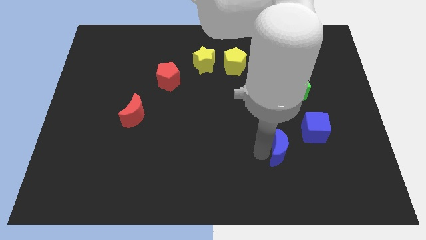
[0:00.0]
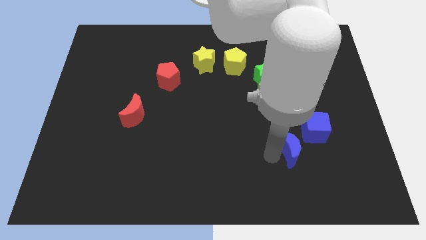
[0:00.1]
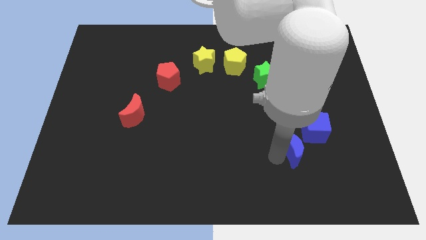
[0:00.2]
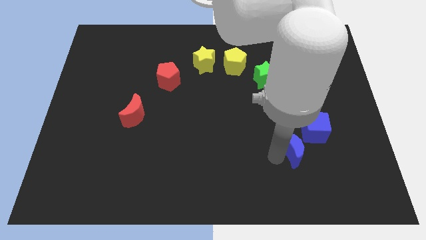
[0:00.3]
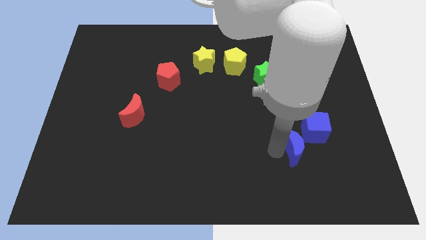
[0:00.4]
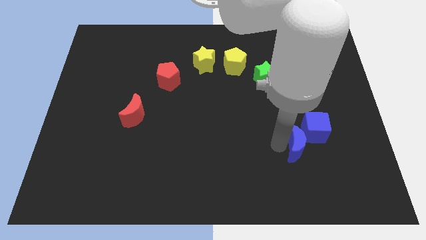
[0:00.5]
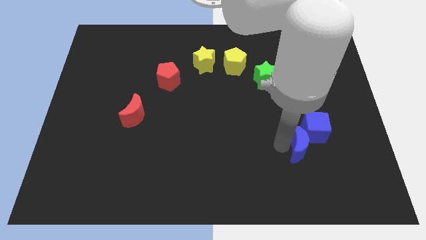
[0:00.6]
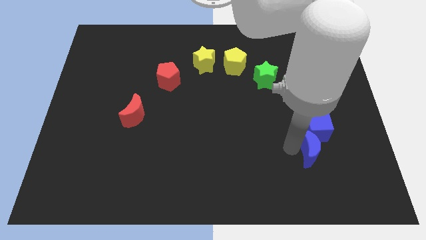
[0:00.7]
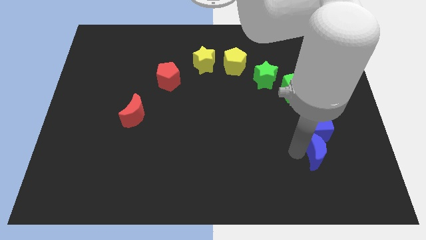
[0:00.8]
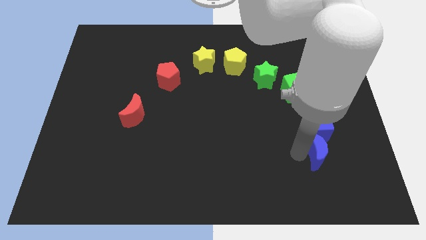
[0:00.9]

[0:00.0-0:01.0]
make the blue crescent to touch the blue cube

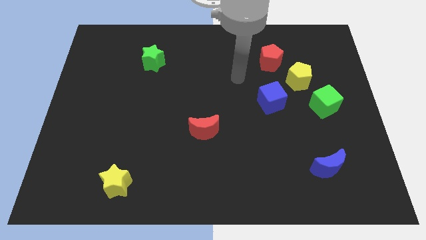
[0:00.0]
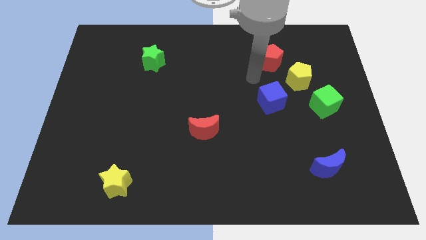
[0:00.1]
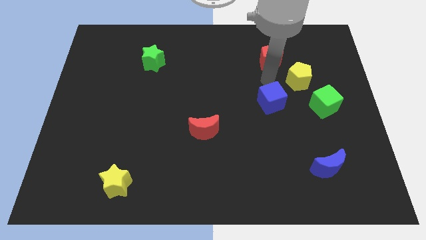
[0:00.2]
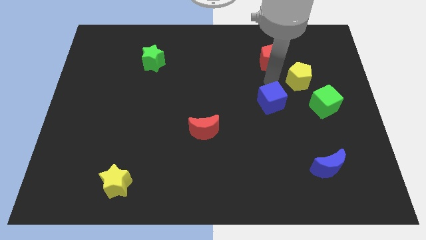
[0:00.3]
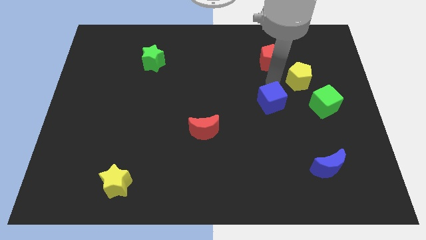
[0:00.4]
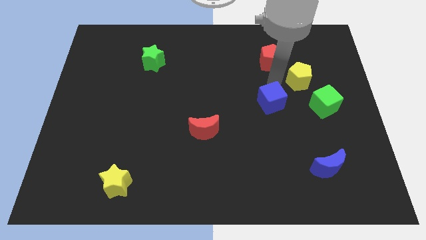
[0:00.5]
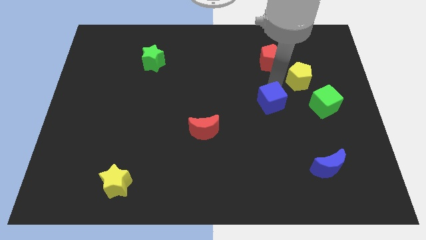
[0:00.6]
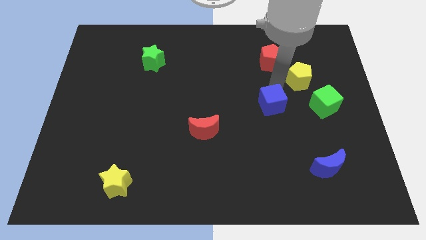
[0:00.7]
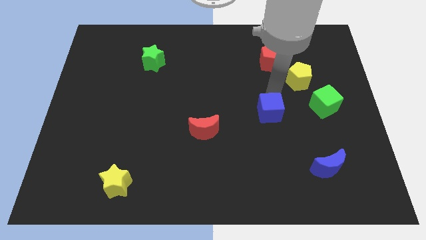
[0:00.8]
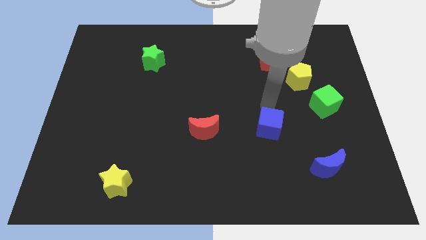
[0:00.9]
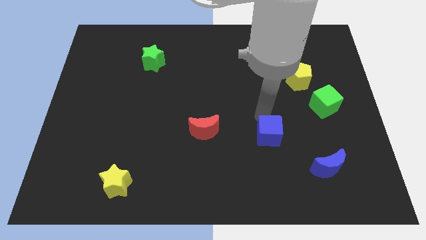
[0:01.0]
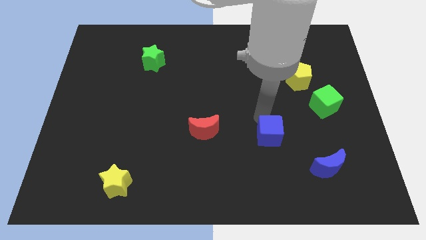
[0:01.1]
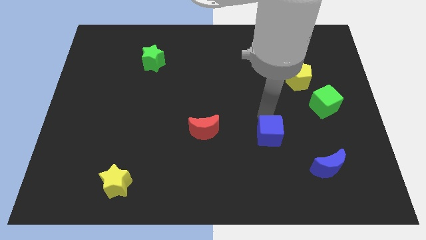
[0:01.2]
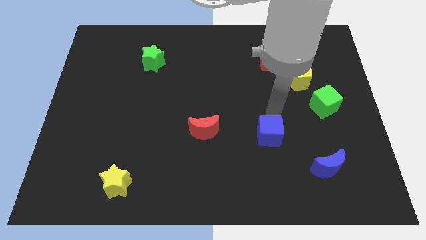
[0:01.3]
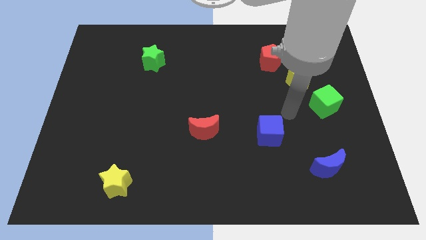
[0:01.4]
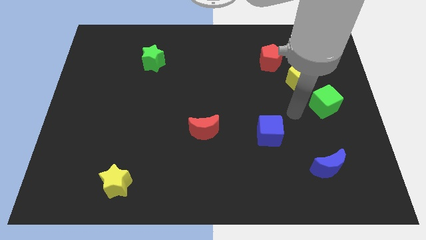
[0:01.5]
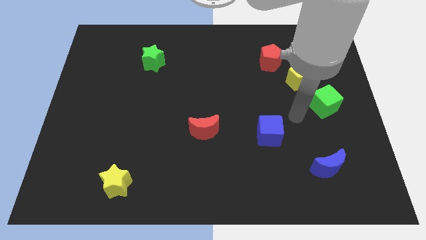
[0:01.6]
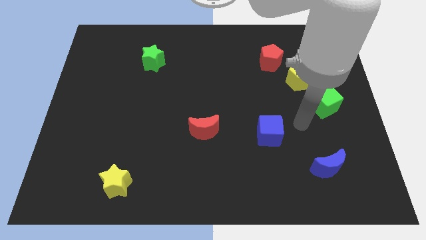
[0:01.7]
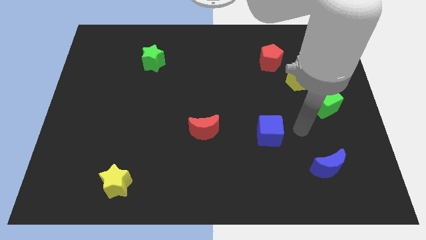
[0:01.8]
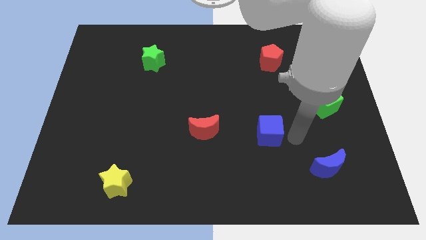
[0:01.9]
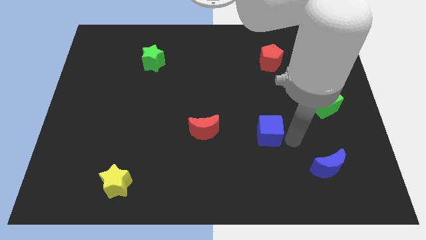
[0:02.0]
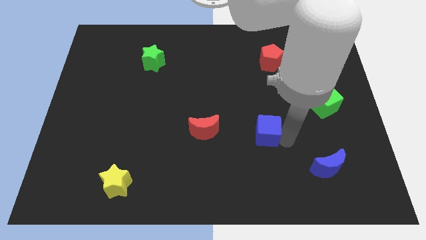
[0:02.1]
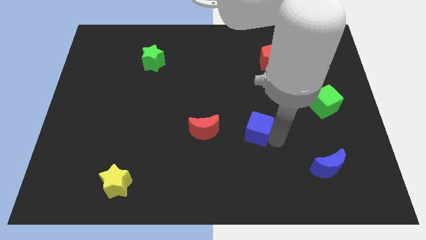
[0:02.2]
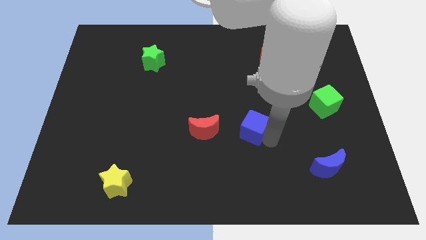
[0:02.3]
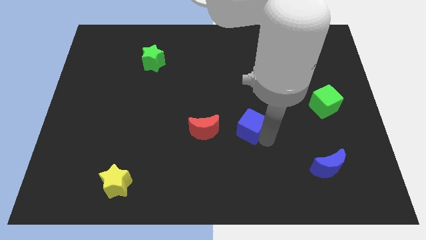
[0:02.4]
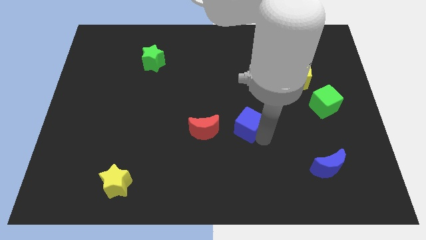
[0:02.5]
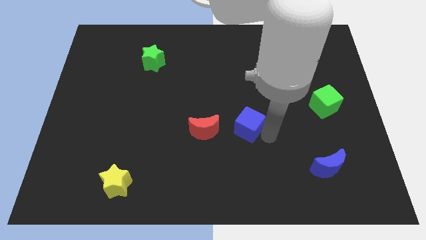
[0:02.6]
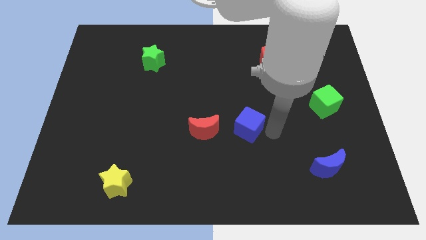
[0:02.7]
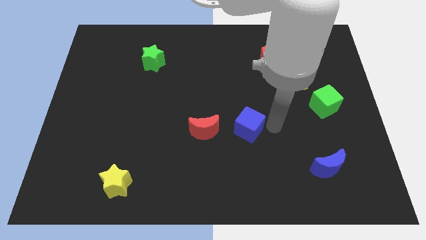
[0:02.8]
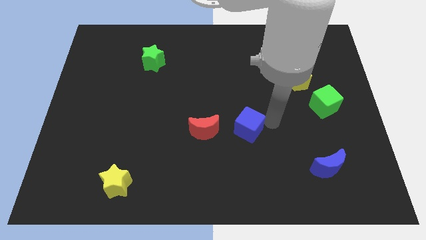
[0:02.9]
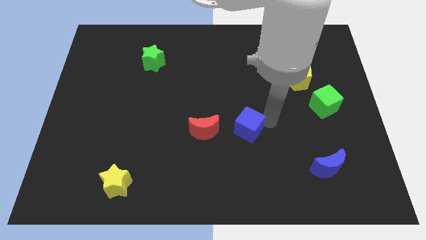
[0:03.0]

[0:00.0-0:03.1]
move blue moon to the right of red moon

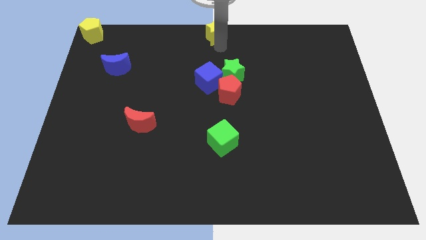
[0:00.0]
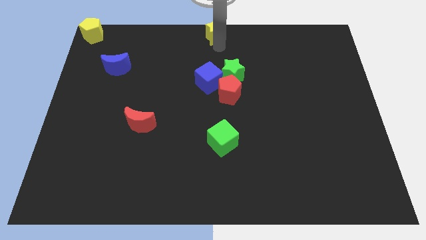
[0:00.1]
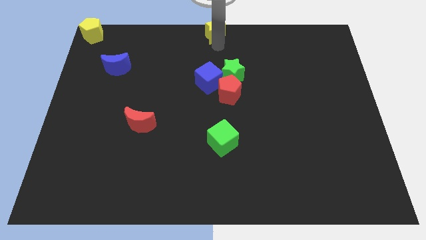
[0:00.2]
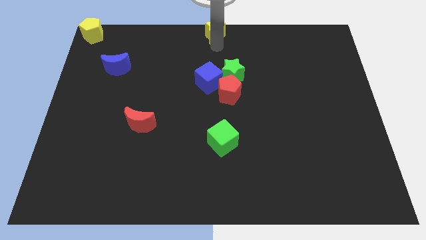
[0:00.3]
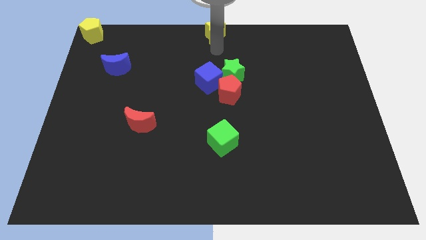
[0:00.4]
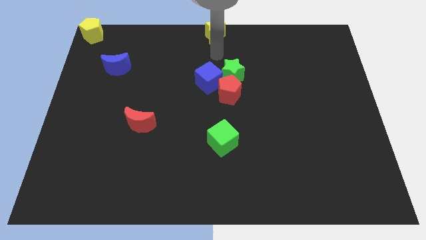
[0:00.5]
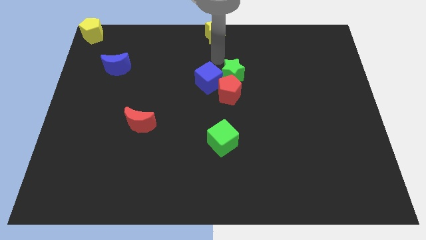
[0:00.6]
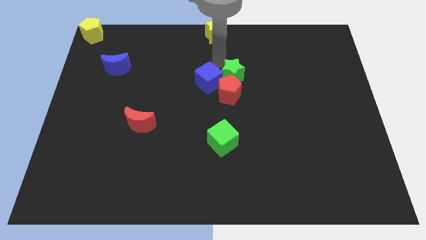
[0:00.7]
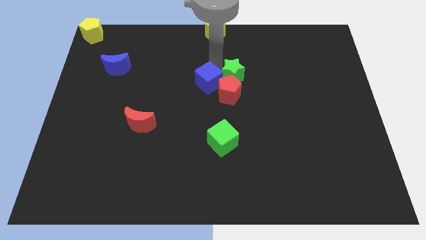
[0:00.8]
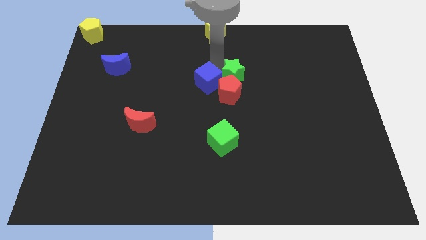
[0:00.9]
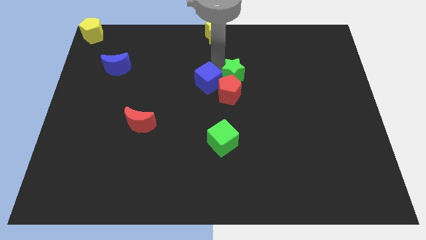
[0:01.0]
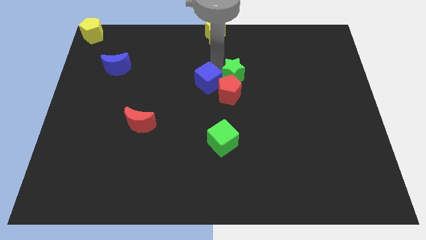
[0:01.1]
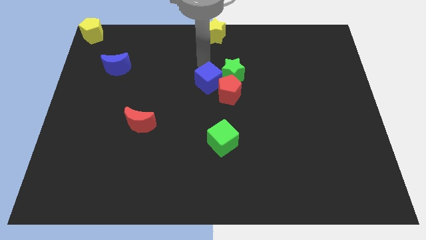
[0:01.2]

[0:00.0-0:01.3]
move arm away from yellow star

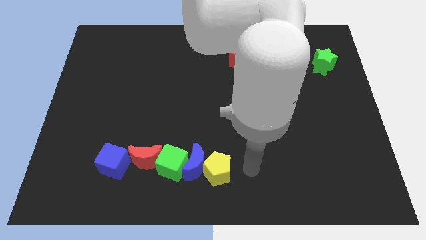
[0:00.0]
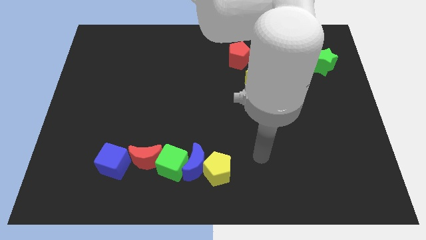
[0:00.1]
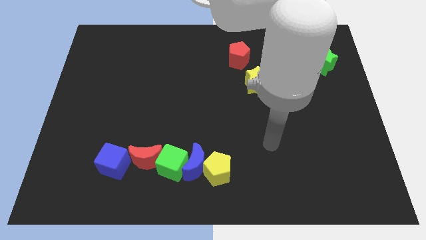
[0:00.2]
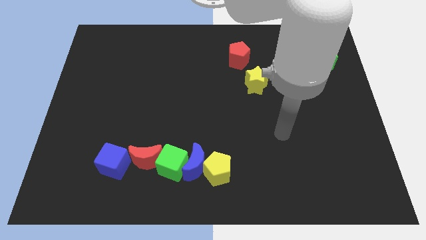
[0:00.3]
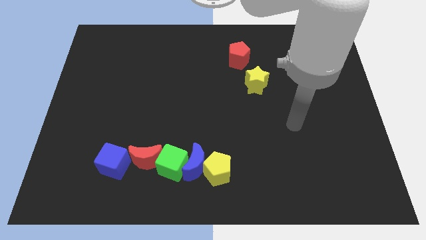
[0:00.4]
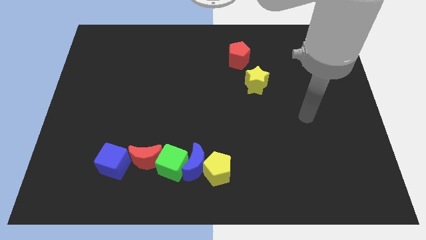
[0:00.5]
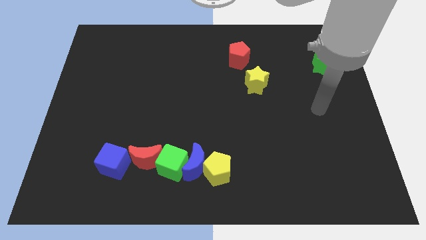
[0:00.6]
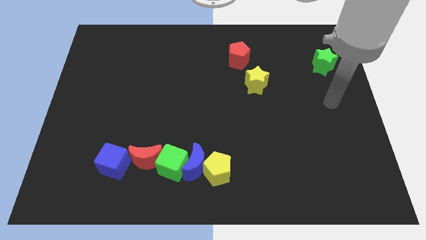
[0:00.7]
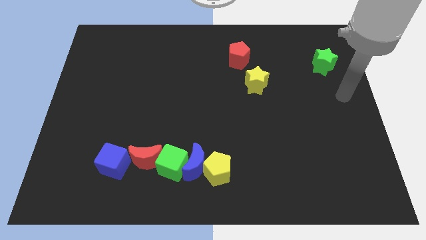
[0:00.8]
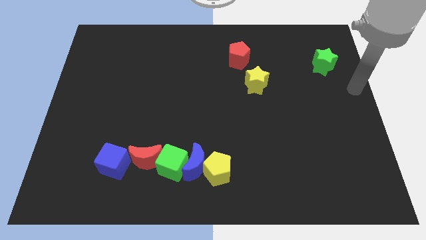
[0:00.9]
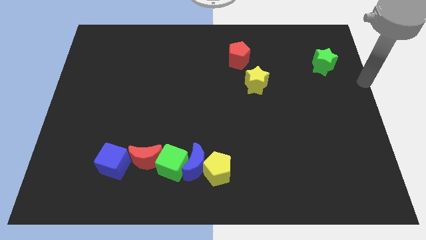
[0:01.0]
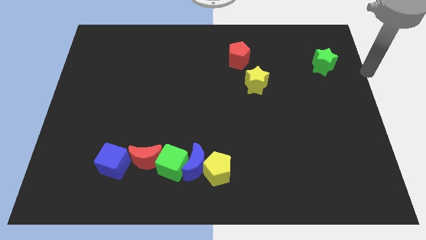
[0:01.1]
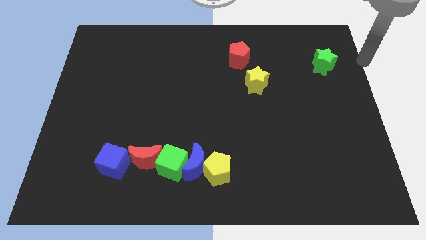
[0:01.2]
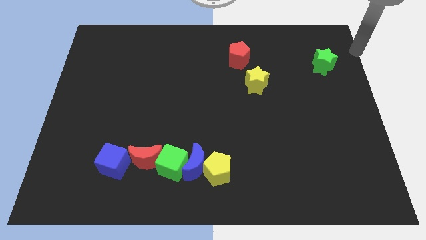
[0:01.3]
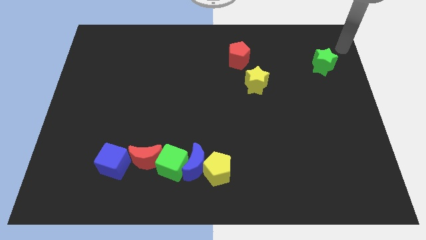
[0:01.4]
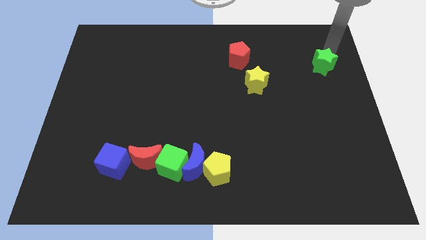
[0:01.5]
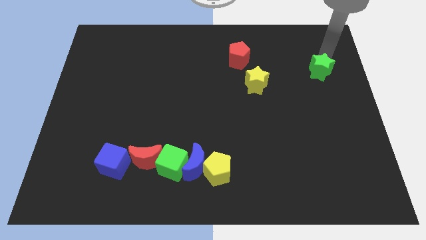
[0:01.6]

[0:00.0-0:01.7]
move the arm above the green star

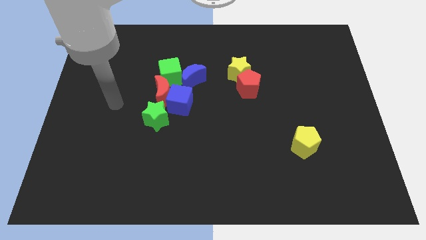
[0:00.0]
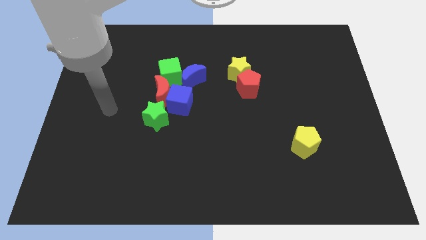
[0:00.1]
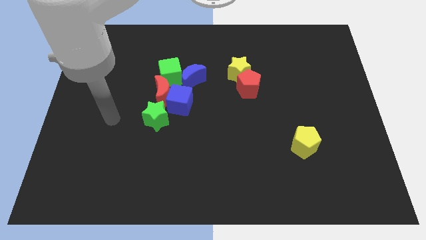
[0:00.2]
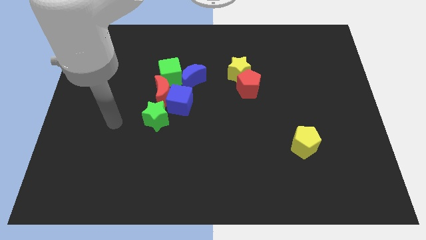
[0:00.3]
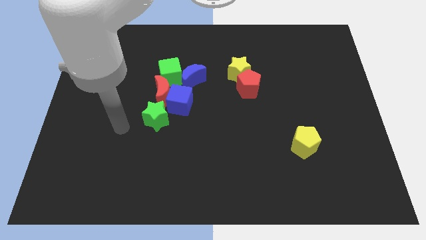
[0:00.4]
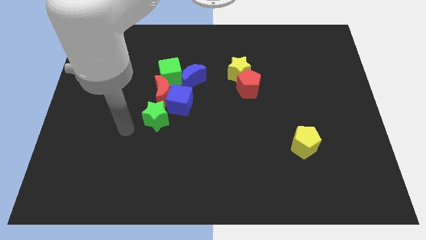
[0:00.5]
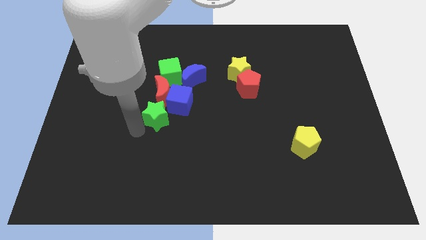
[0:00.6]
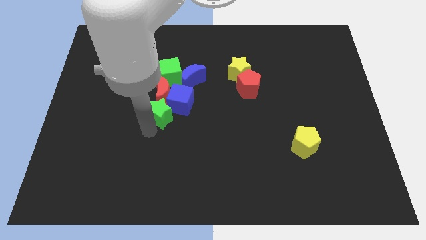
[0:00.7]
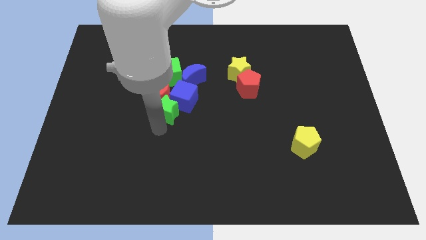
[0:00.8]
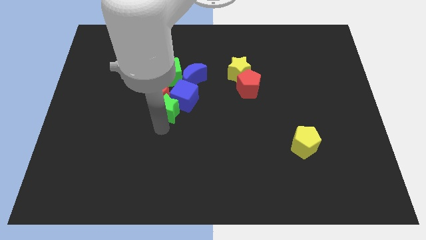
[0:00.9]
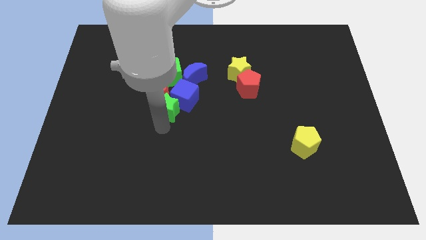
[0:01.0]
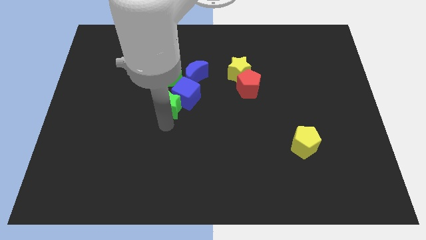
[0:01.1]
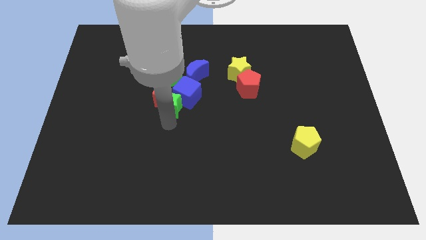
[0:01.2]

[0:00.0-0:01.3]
push the green star into the blue cube

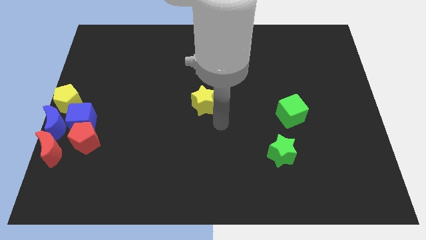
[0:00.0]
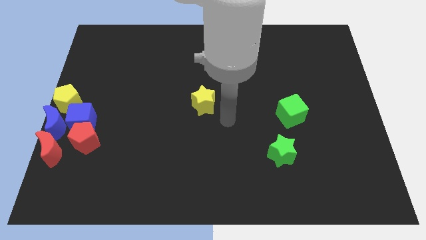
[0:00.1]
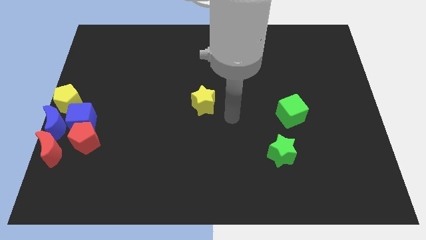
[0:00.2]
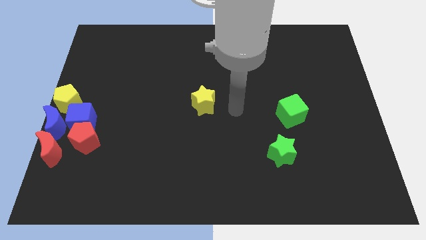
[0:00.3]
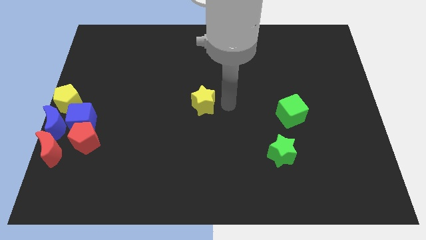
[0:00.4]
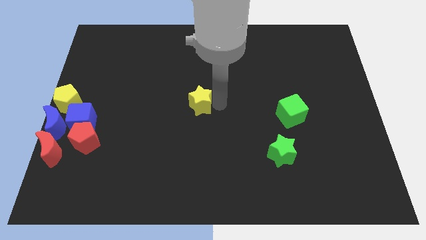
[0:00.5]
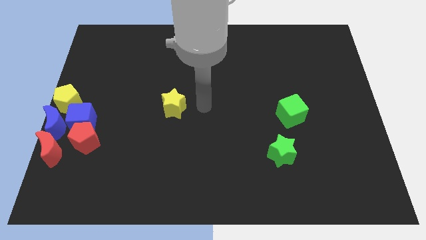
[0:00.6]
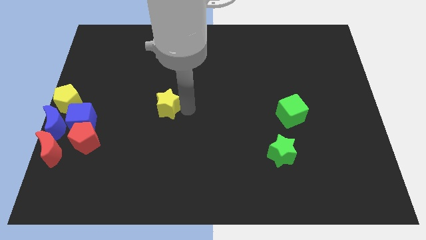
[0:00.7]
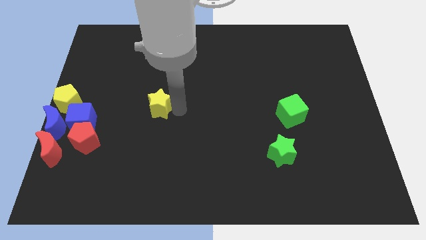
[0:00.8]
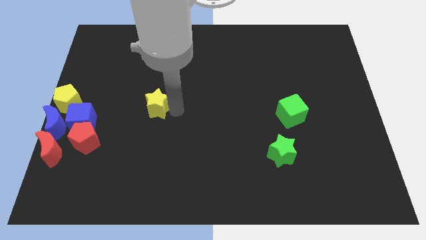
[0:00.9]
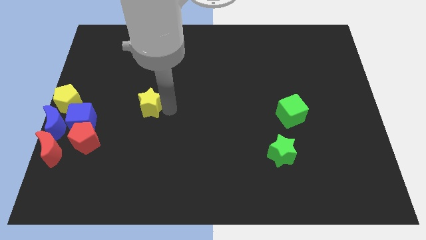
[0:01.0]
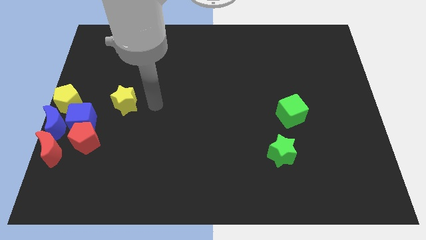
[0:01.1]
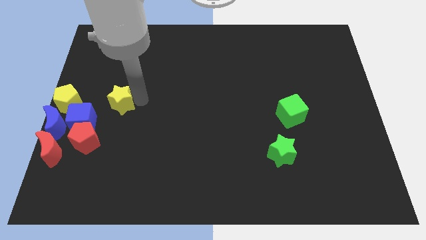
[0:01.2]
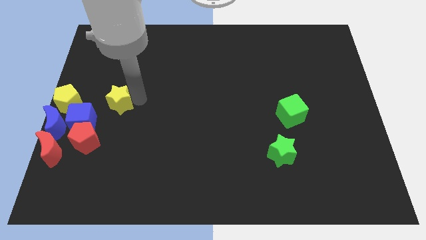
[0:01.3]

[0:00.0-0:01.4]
slide the yellow star to the right of the yellow pentagon
